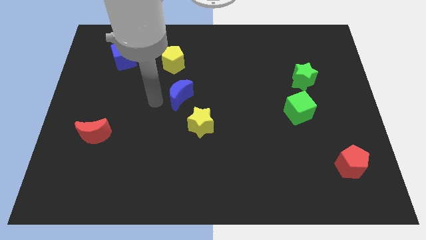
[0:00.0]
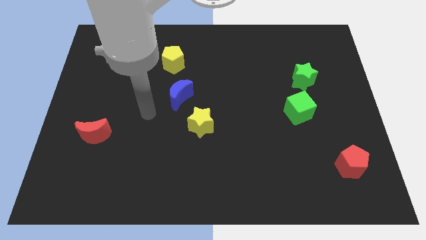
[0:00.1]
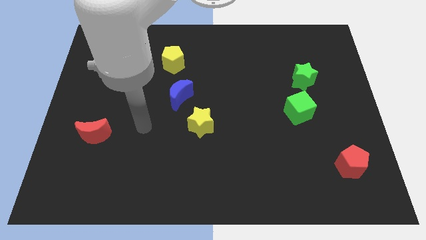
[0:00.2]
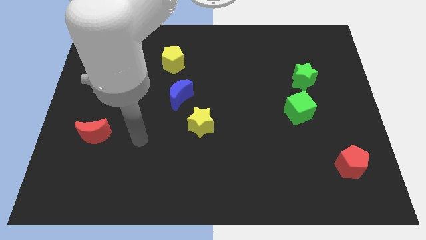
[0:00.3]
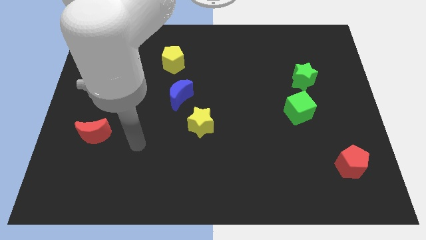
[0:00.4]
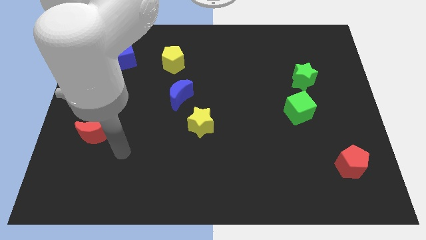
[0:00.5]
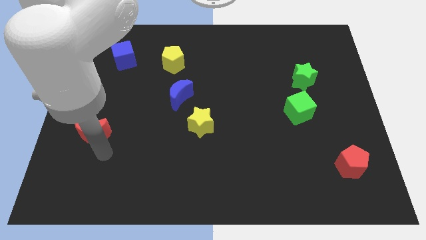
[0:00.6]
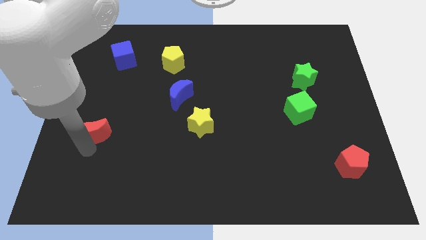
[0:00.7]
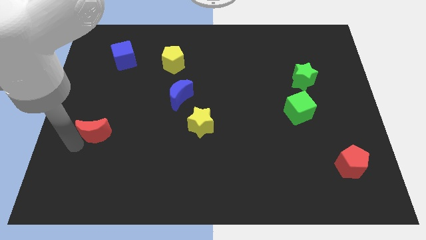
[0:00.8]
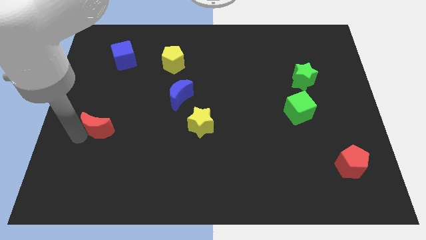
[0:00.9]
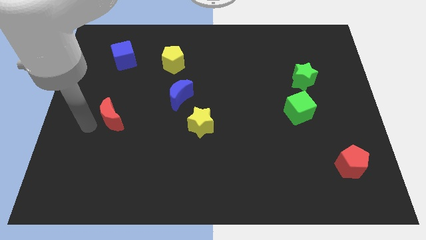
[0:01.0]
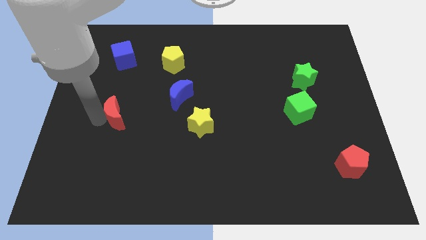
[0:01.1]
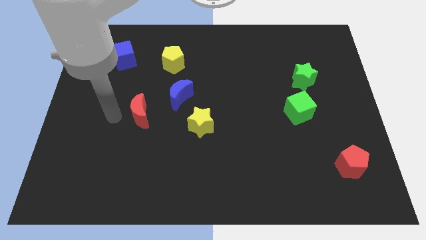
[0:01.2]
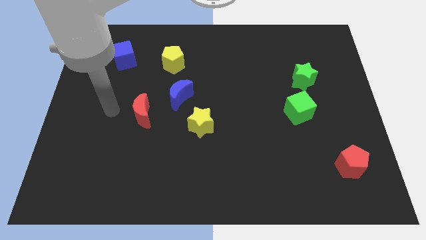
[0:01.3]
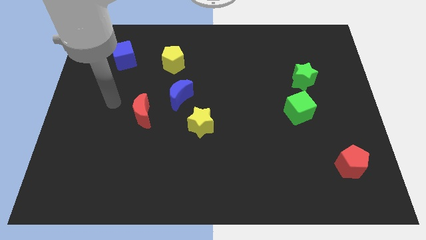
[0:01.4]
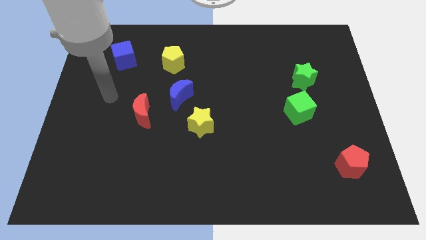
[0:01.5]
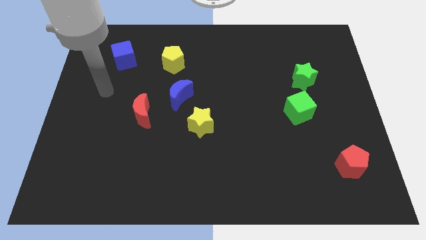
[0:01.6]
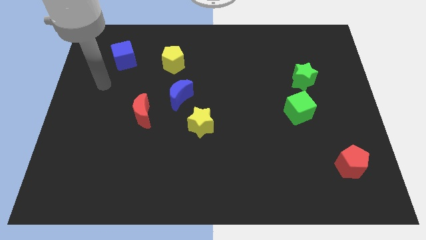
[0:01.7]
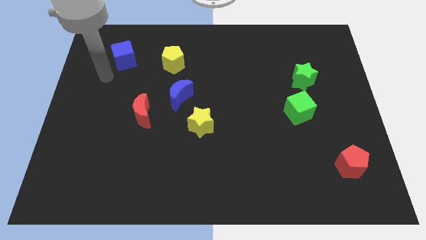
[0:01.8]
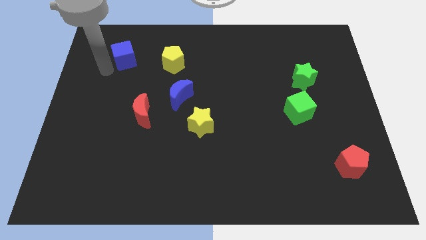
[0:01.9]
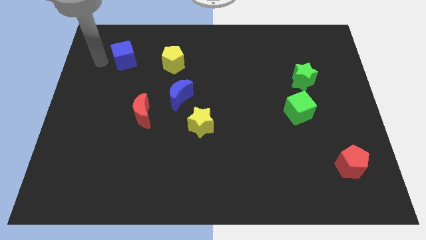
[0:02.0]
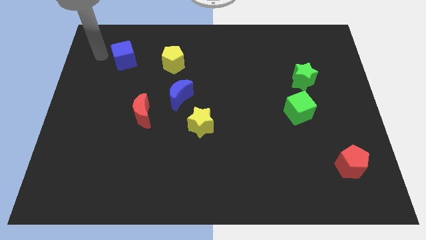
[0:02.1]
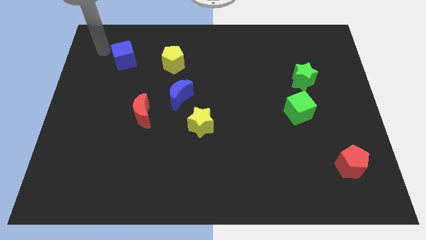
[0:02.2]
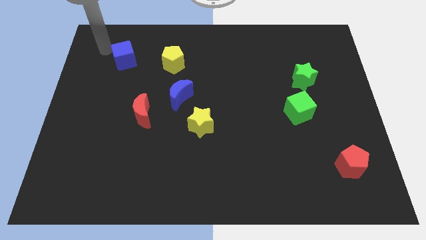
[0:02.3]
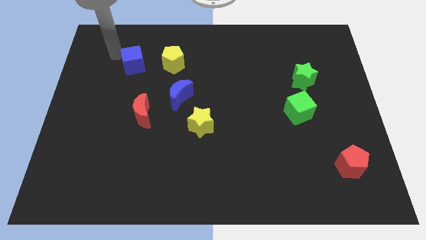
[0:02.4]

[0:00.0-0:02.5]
push the red moon towards the right

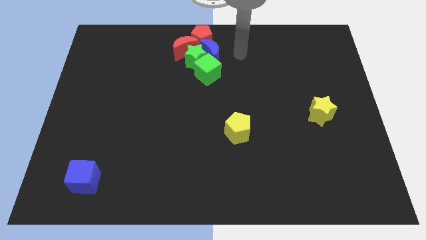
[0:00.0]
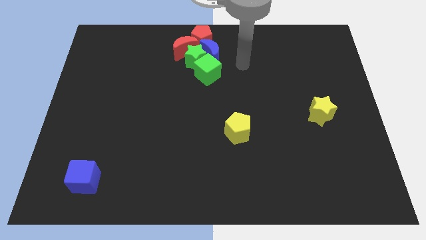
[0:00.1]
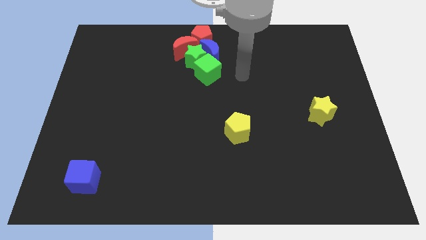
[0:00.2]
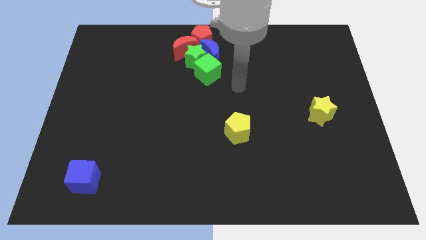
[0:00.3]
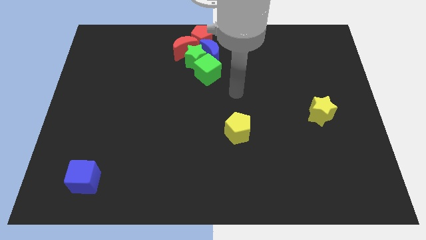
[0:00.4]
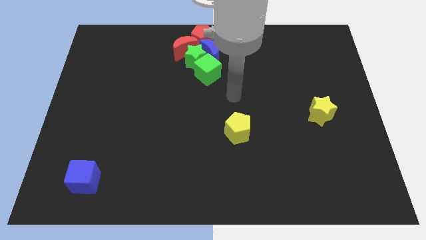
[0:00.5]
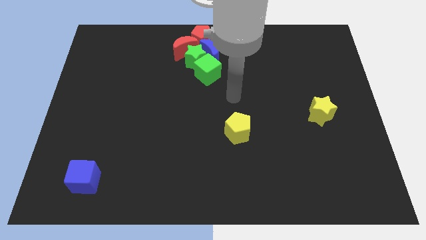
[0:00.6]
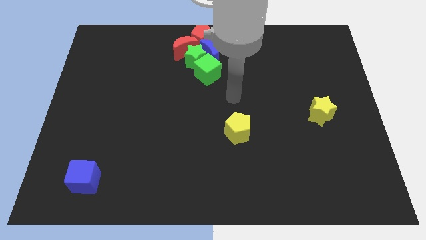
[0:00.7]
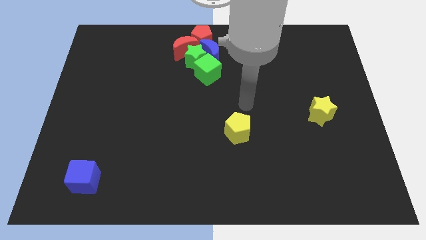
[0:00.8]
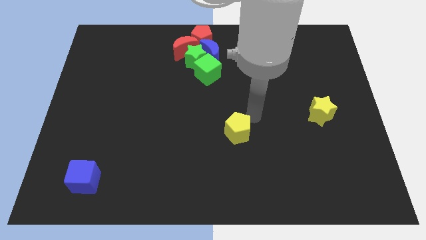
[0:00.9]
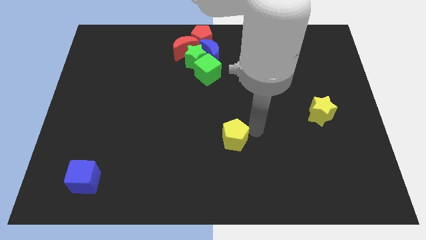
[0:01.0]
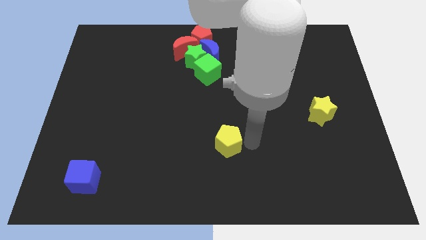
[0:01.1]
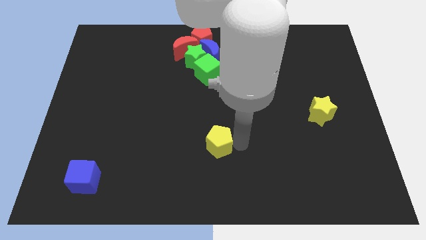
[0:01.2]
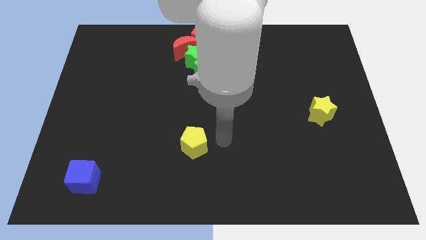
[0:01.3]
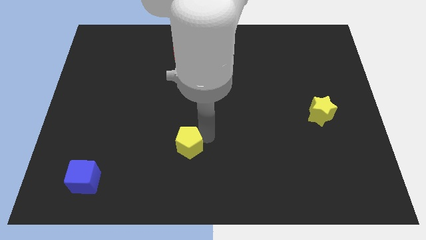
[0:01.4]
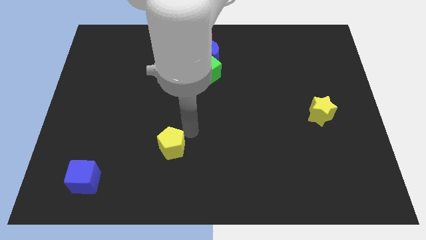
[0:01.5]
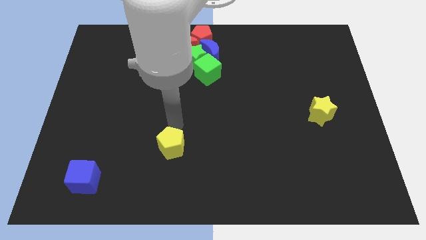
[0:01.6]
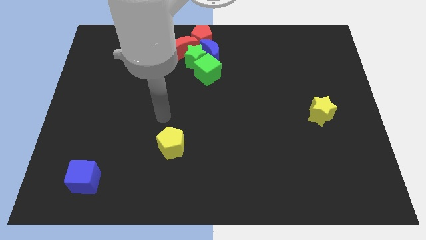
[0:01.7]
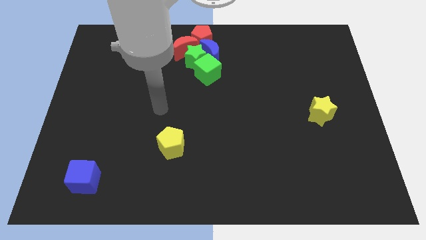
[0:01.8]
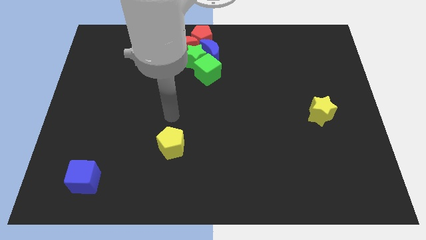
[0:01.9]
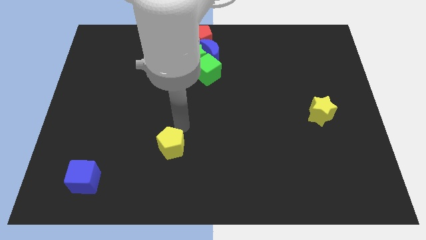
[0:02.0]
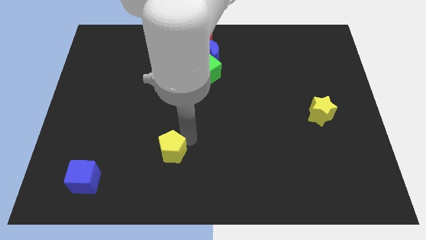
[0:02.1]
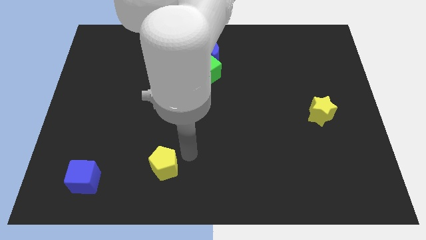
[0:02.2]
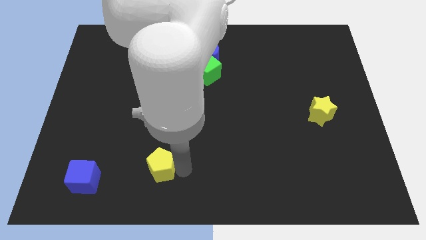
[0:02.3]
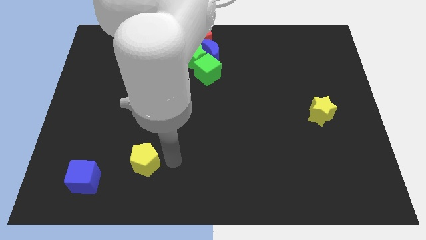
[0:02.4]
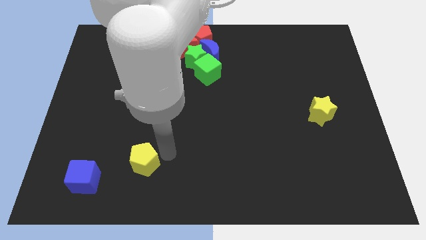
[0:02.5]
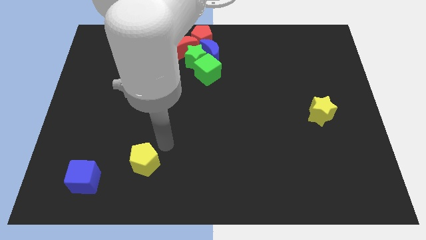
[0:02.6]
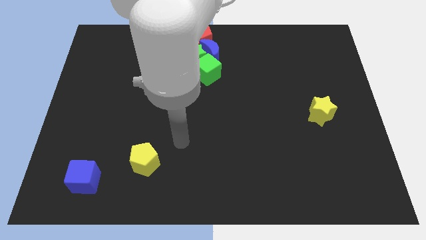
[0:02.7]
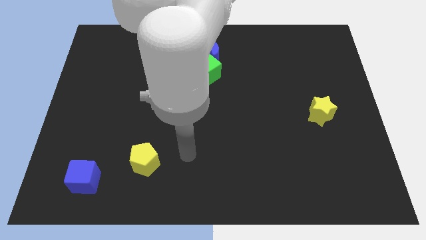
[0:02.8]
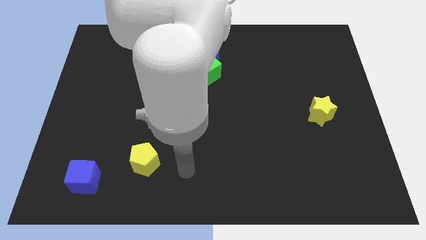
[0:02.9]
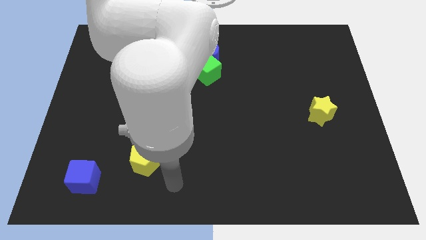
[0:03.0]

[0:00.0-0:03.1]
move yellow pentagon towards blue cube

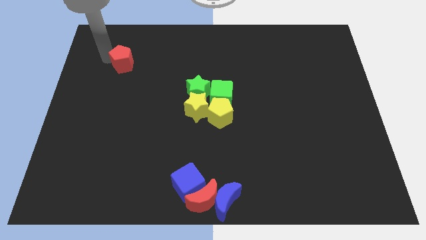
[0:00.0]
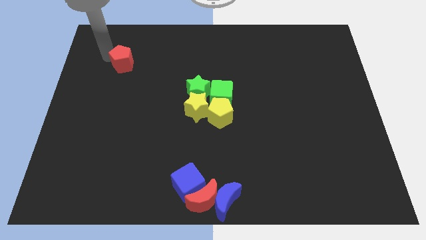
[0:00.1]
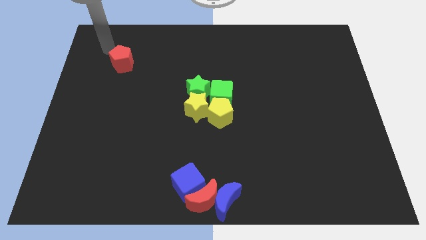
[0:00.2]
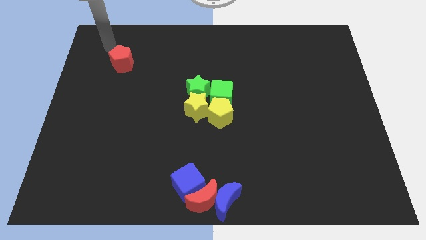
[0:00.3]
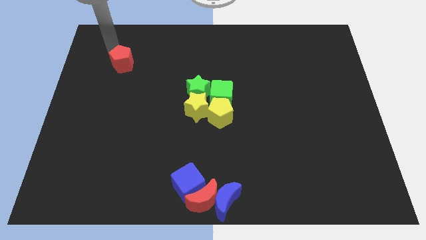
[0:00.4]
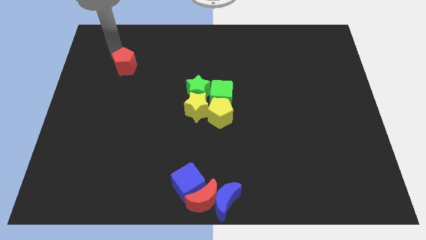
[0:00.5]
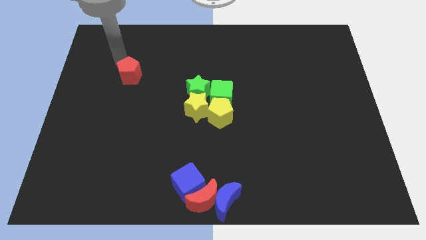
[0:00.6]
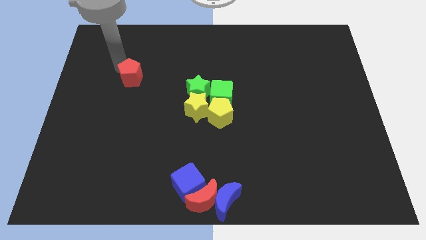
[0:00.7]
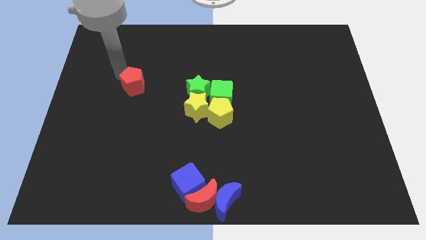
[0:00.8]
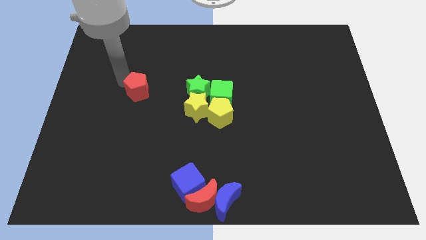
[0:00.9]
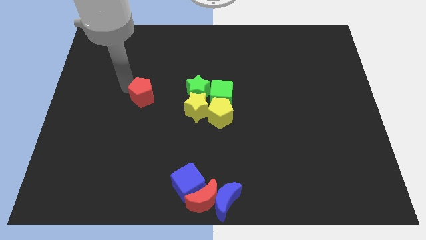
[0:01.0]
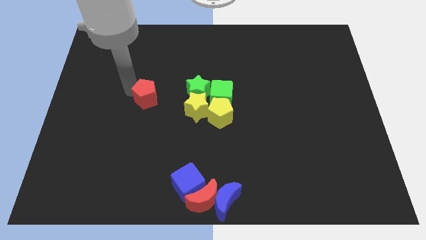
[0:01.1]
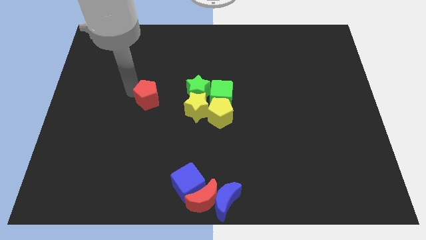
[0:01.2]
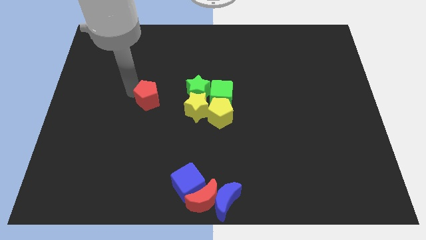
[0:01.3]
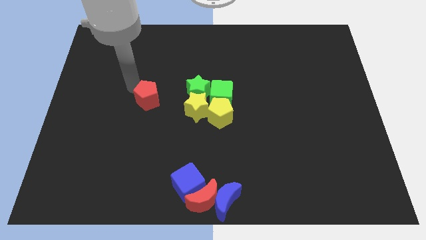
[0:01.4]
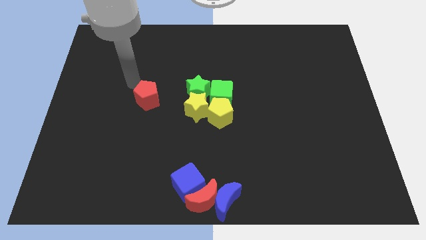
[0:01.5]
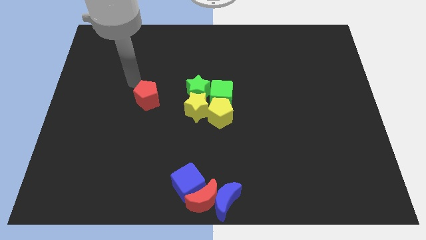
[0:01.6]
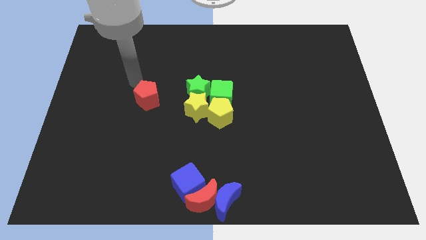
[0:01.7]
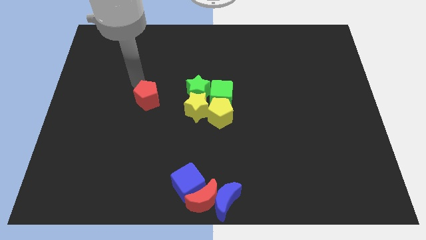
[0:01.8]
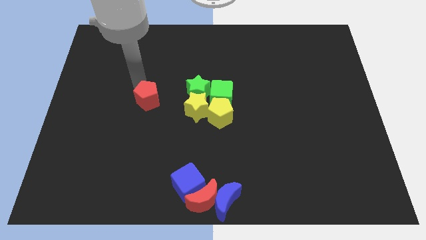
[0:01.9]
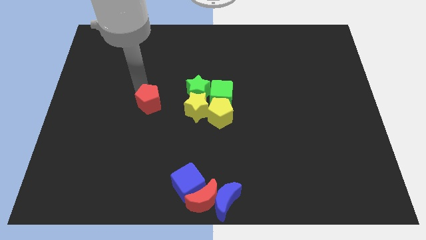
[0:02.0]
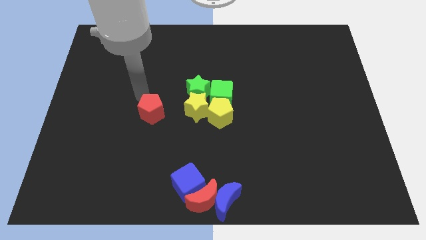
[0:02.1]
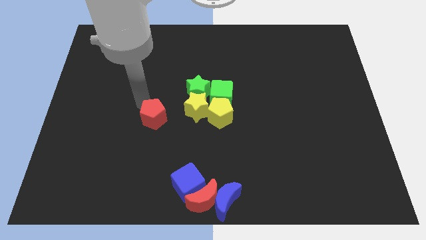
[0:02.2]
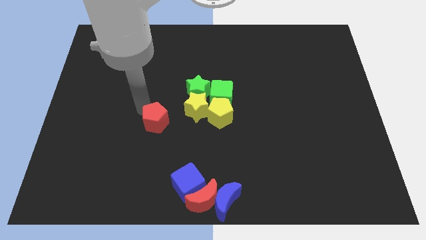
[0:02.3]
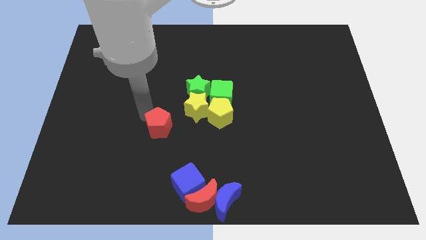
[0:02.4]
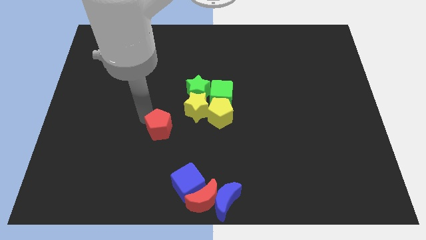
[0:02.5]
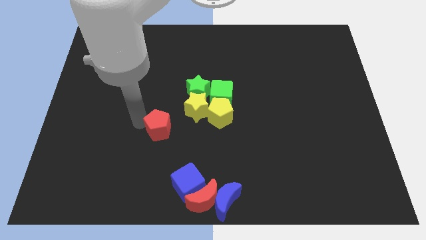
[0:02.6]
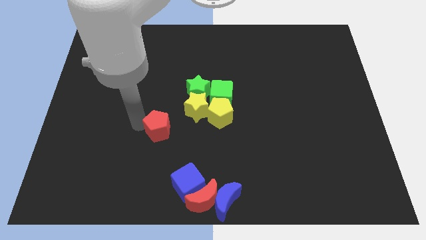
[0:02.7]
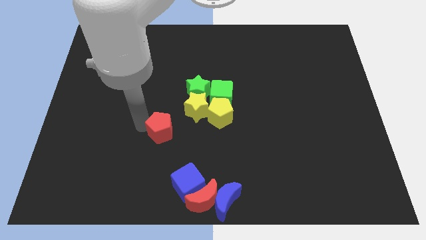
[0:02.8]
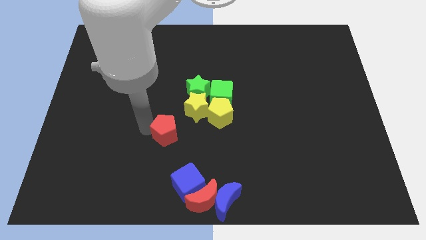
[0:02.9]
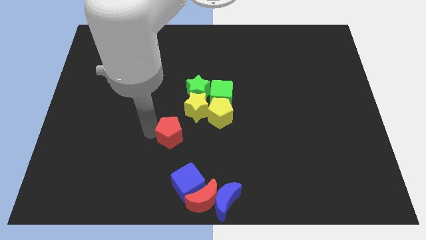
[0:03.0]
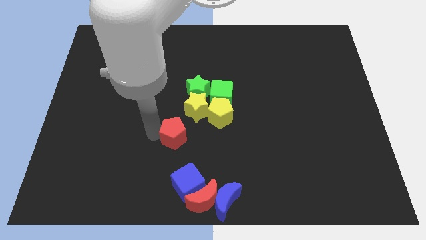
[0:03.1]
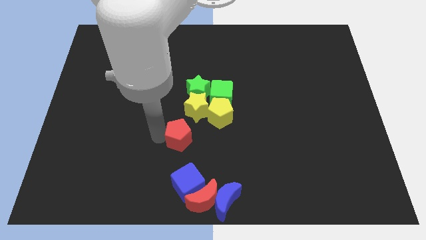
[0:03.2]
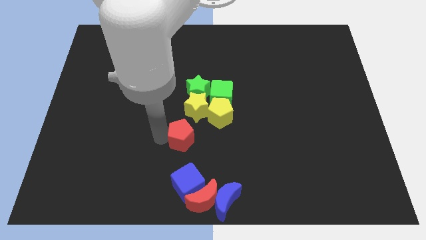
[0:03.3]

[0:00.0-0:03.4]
place the red pentagon diagonally bottom left to the yellow star
